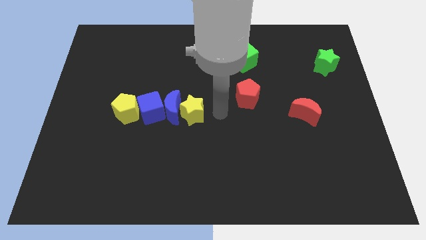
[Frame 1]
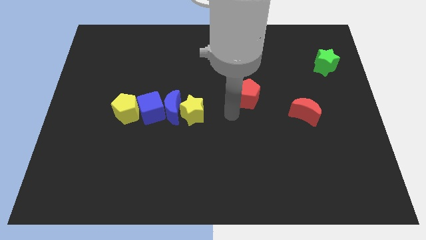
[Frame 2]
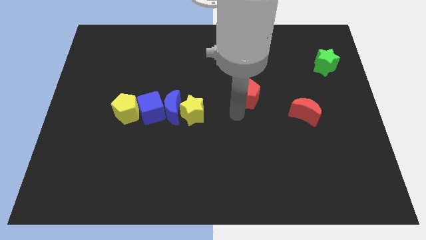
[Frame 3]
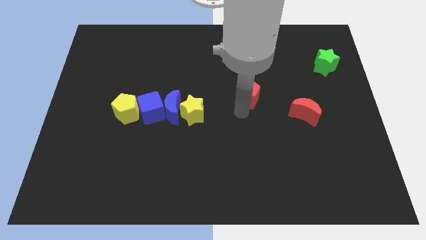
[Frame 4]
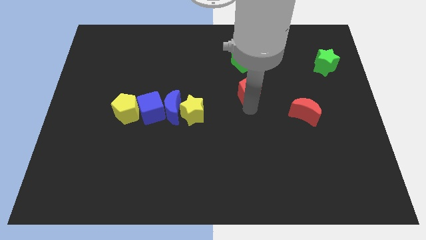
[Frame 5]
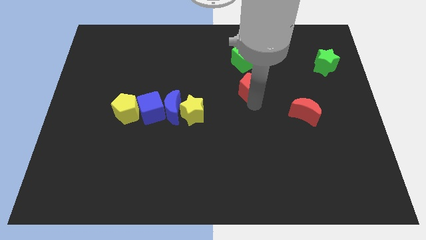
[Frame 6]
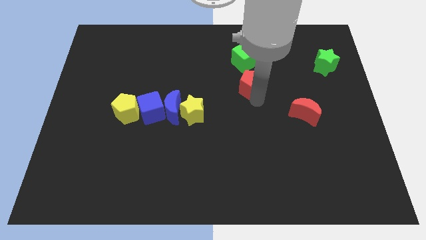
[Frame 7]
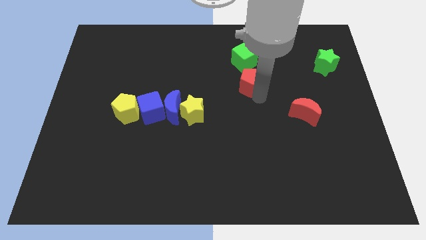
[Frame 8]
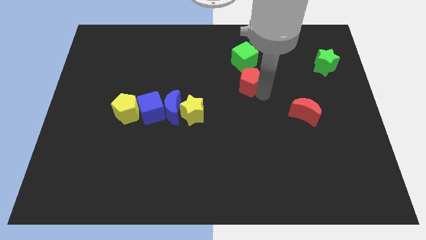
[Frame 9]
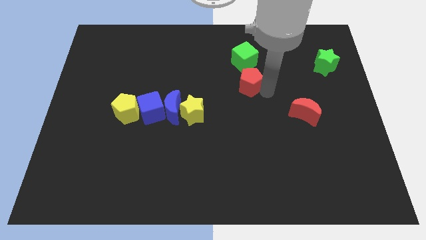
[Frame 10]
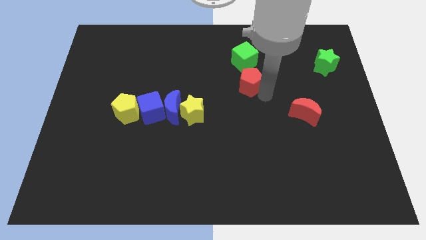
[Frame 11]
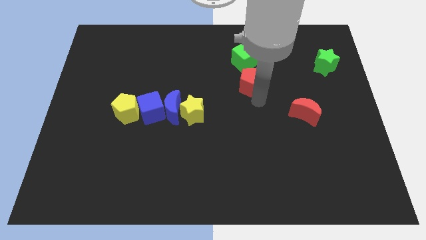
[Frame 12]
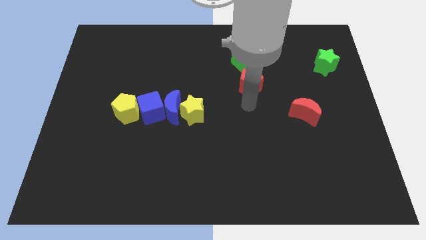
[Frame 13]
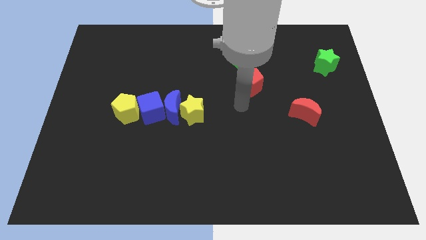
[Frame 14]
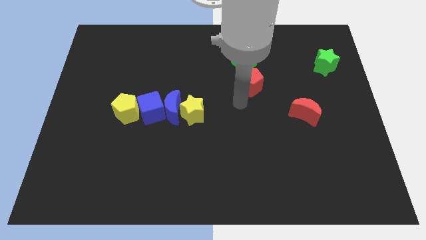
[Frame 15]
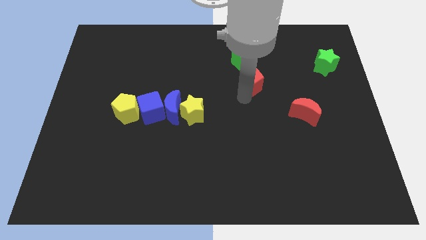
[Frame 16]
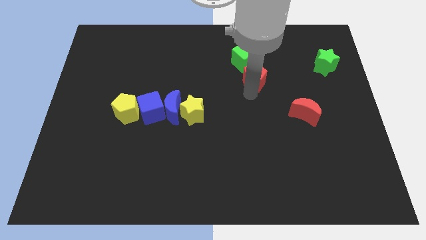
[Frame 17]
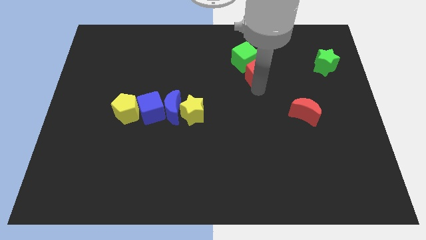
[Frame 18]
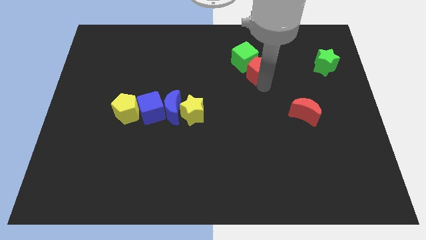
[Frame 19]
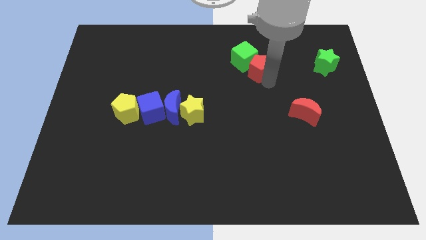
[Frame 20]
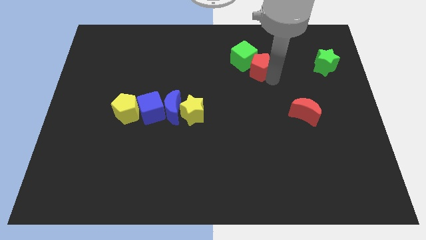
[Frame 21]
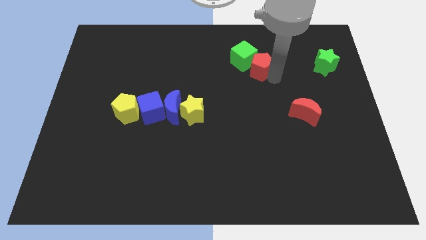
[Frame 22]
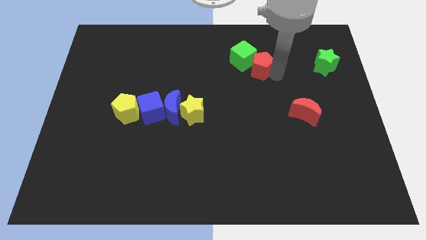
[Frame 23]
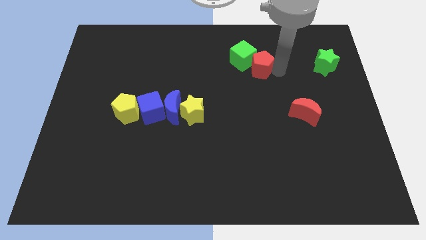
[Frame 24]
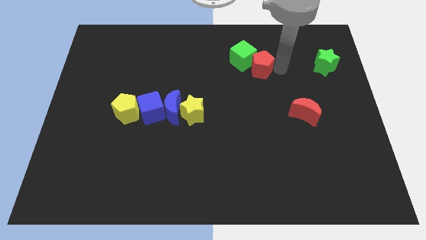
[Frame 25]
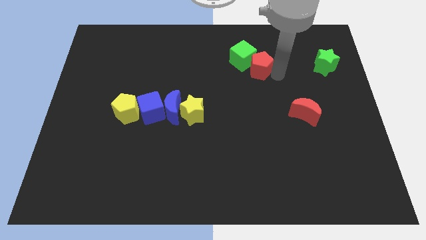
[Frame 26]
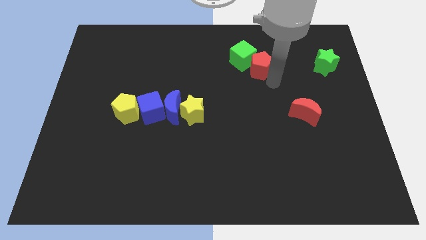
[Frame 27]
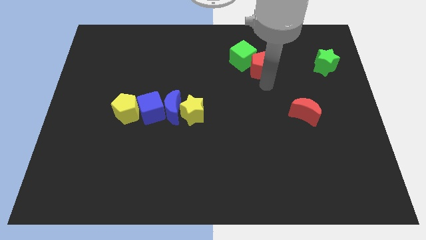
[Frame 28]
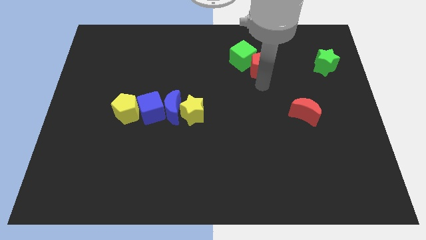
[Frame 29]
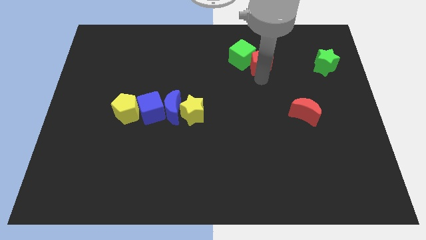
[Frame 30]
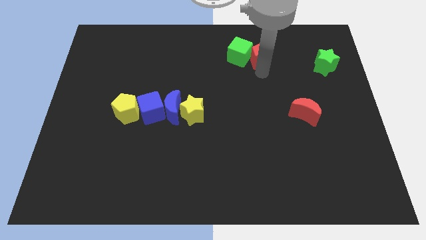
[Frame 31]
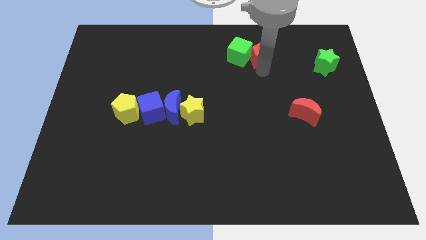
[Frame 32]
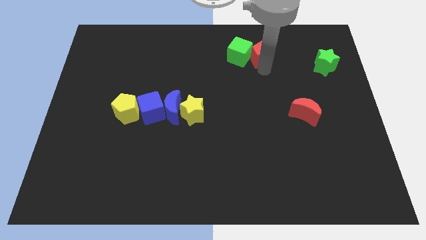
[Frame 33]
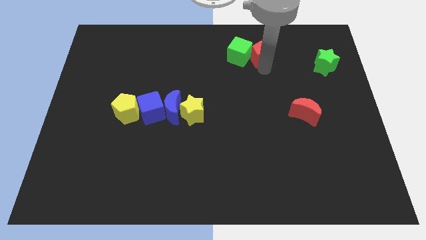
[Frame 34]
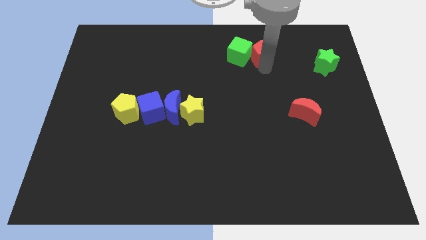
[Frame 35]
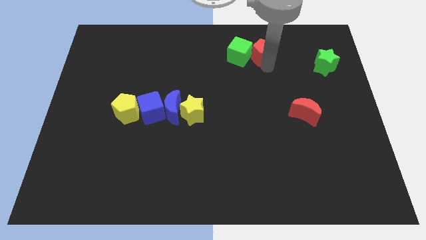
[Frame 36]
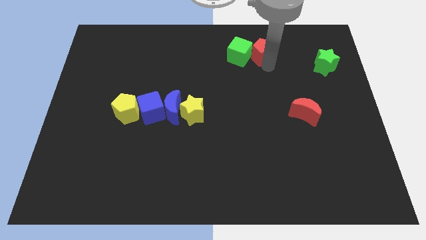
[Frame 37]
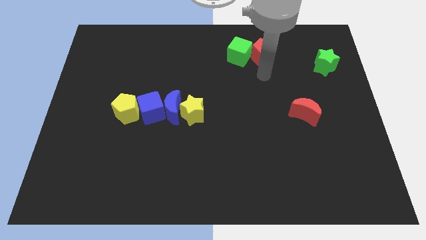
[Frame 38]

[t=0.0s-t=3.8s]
place the red pentagon at the right side of the green cube

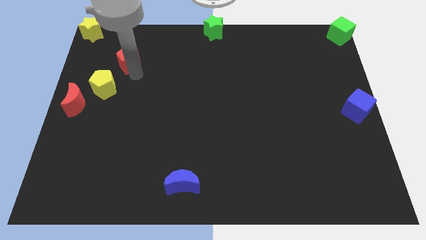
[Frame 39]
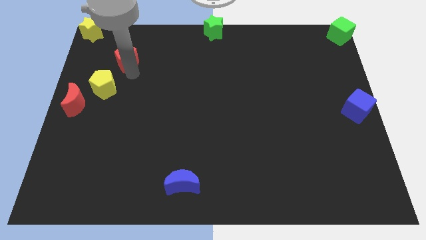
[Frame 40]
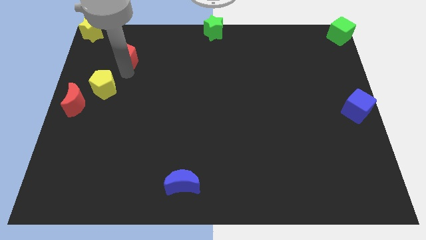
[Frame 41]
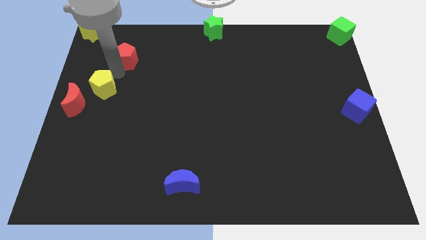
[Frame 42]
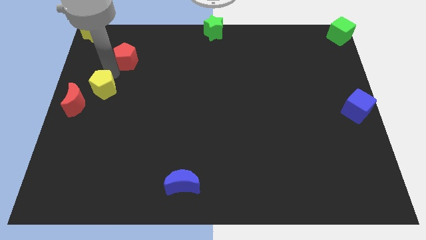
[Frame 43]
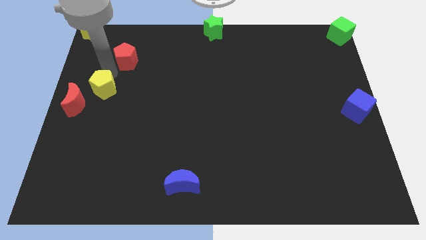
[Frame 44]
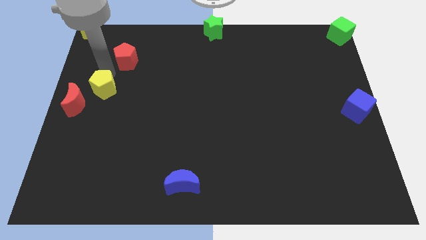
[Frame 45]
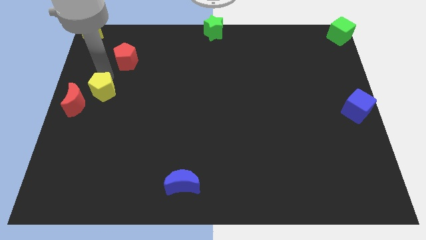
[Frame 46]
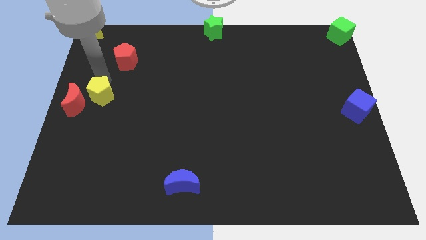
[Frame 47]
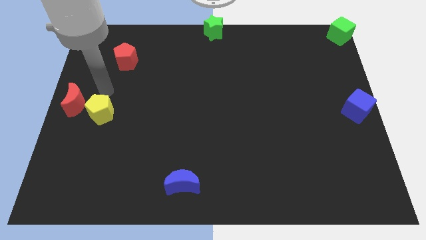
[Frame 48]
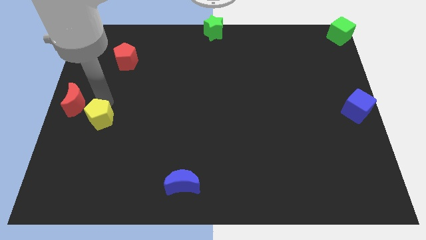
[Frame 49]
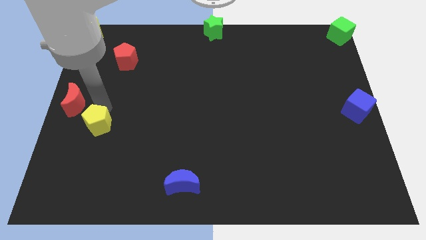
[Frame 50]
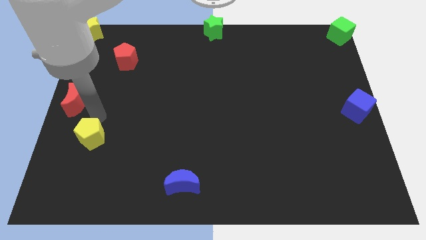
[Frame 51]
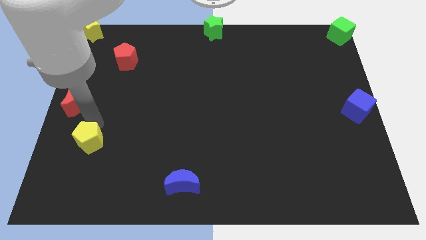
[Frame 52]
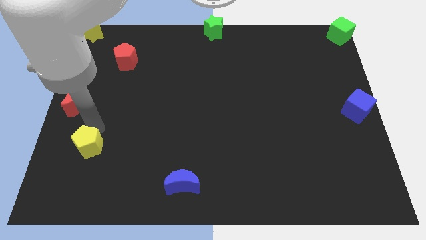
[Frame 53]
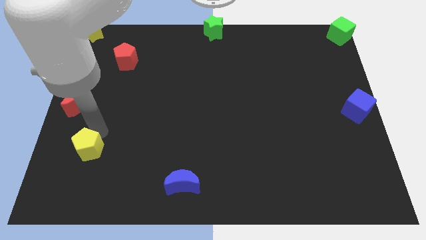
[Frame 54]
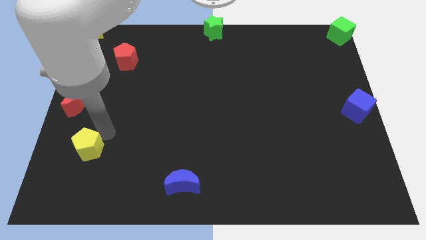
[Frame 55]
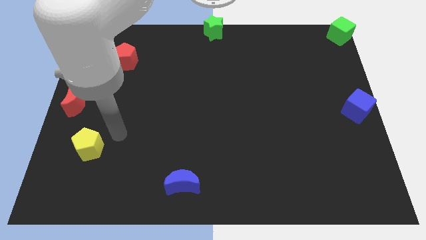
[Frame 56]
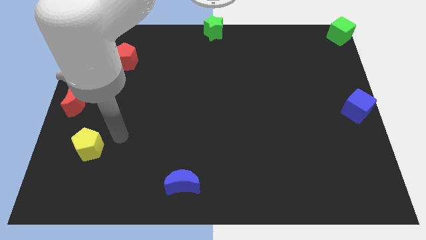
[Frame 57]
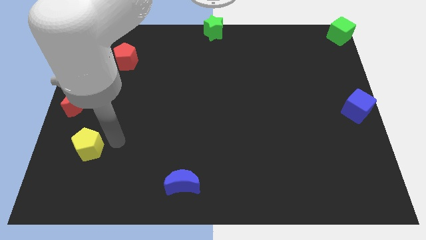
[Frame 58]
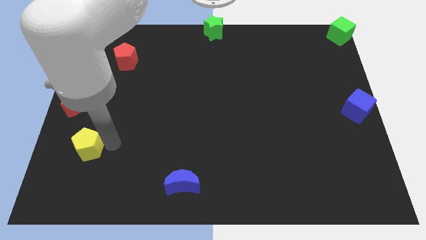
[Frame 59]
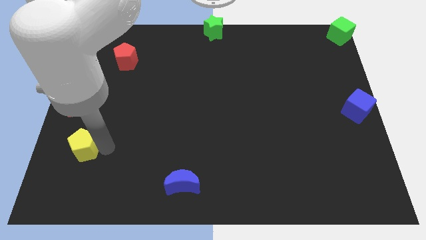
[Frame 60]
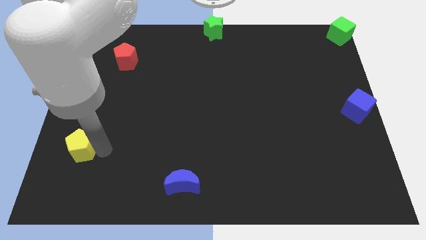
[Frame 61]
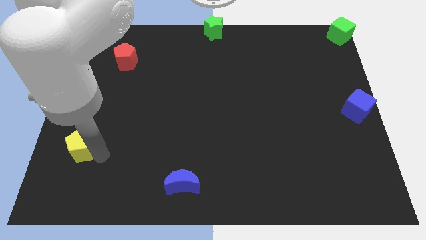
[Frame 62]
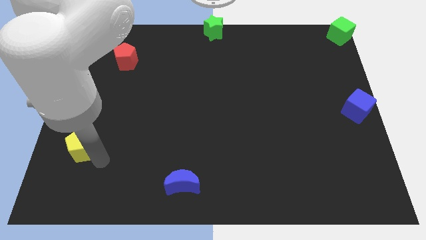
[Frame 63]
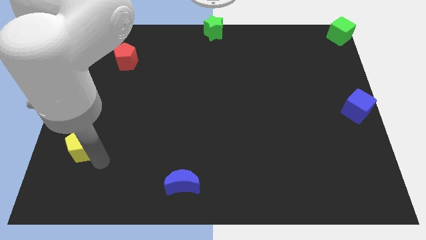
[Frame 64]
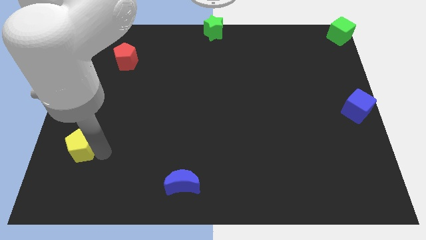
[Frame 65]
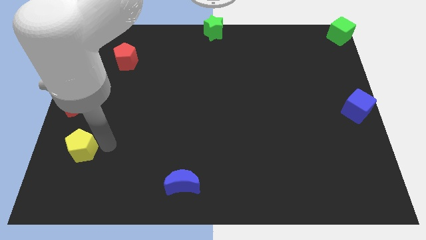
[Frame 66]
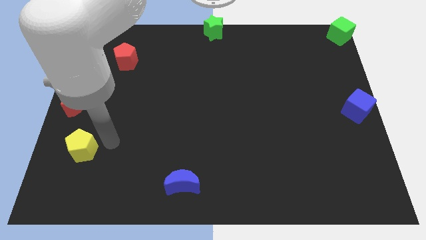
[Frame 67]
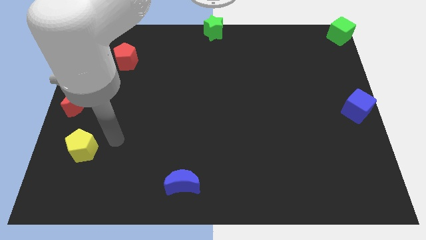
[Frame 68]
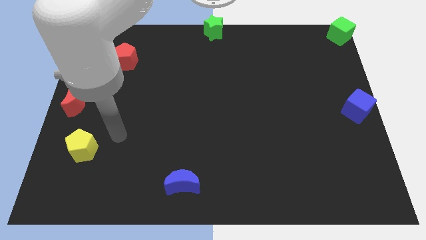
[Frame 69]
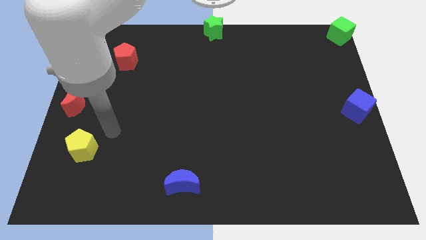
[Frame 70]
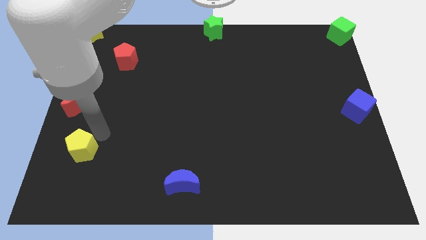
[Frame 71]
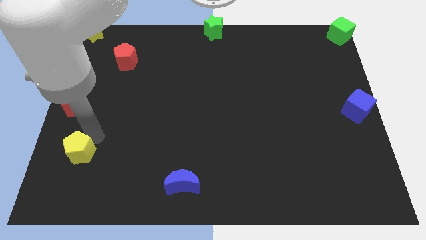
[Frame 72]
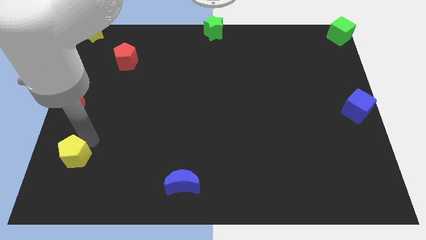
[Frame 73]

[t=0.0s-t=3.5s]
push yellow pentagon below red crescent

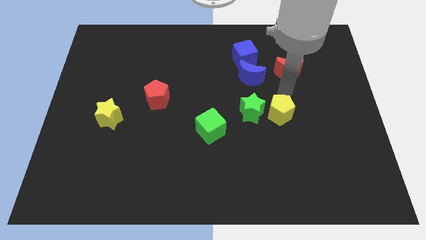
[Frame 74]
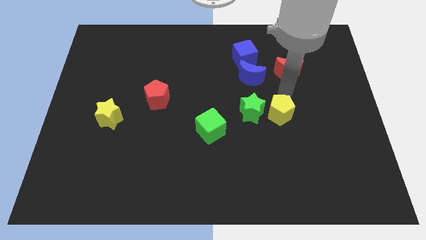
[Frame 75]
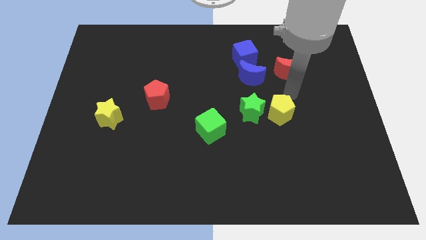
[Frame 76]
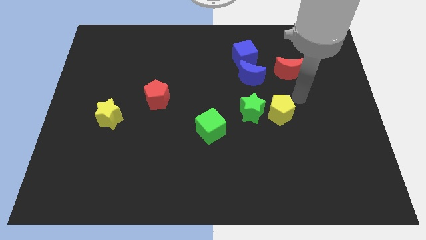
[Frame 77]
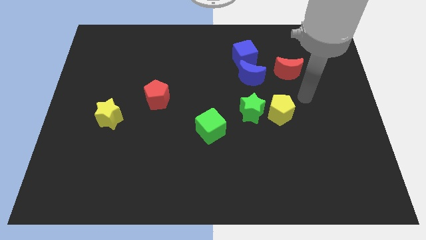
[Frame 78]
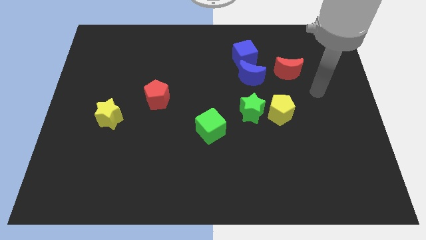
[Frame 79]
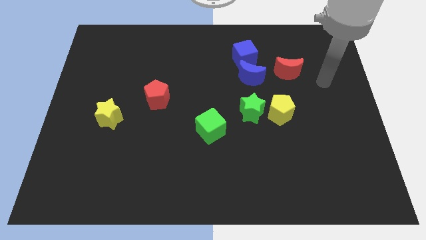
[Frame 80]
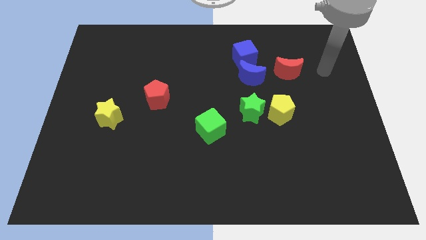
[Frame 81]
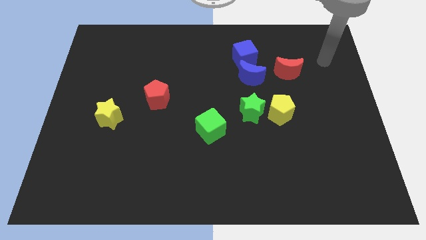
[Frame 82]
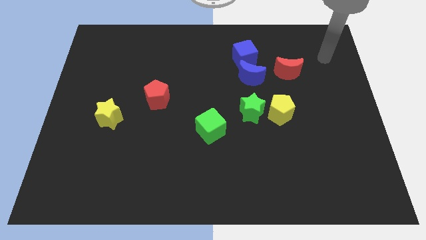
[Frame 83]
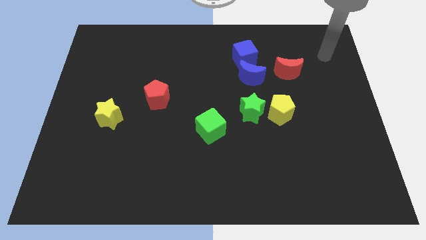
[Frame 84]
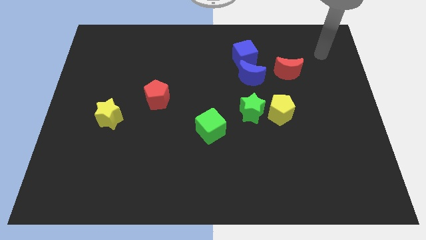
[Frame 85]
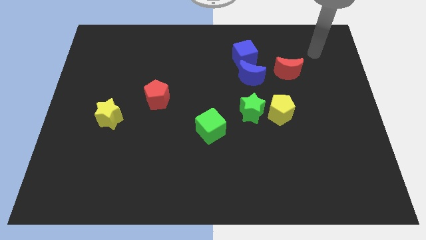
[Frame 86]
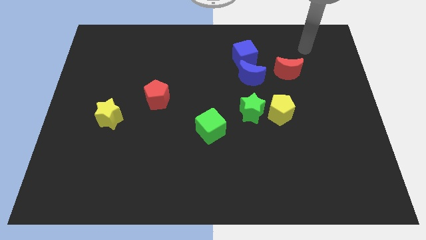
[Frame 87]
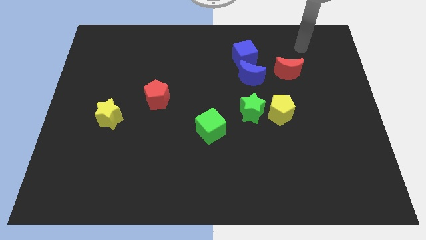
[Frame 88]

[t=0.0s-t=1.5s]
move the arm away from the yellow pentagon
